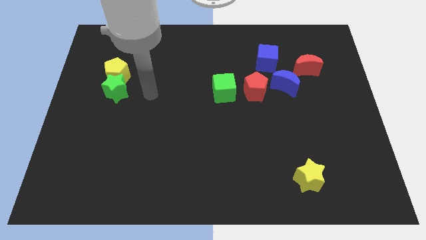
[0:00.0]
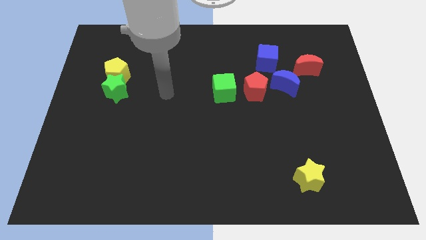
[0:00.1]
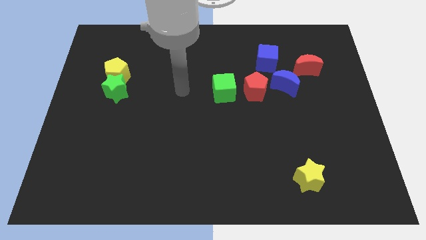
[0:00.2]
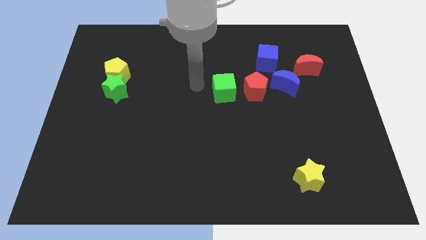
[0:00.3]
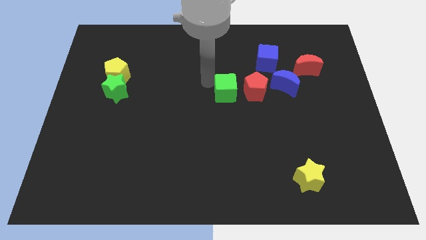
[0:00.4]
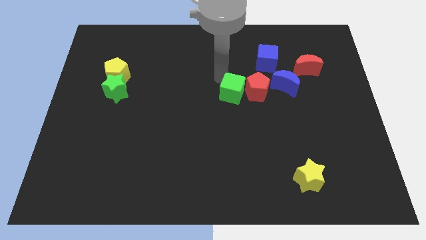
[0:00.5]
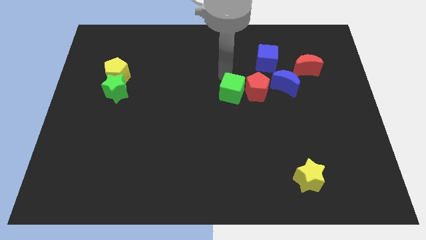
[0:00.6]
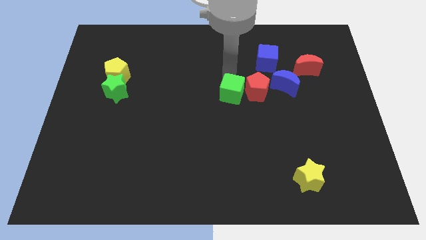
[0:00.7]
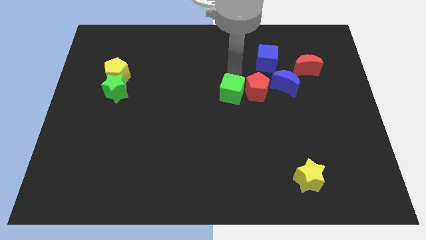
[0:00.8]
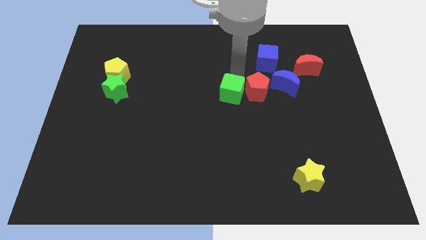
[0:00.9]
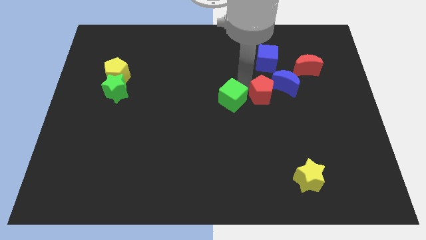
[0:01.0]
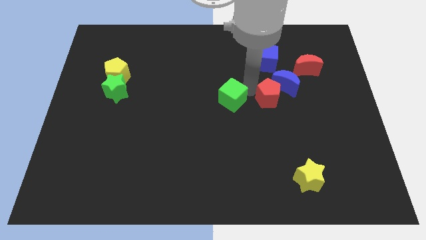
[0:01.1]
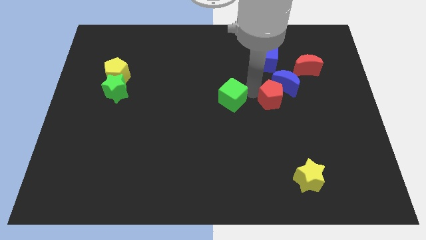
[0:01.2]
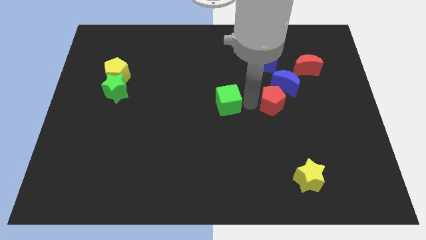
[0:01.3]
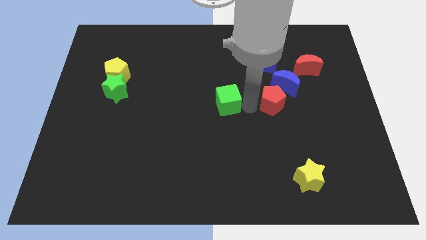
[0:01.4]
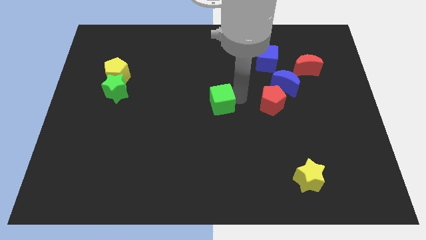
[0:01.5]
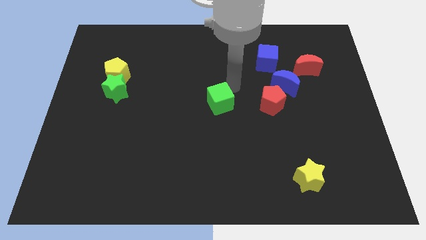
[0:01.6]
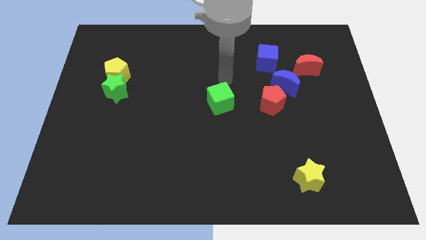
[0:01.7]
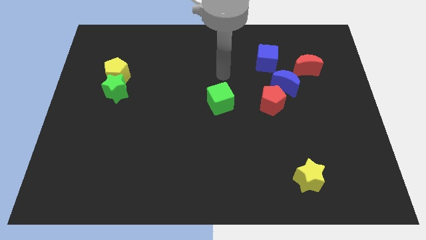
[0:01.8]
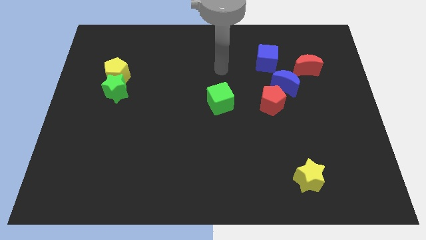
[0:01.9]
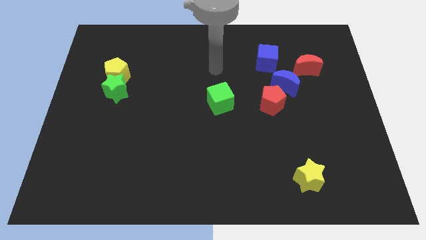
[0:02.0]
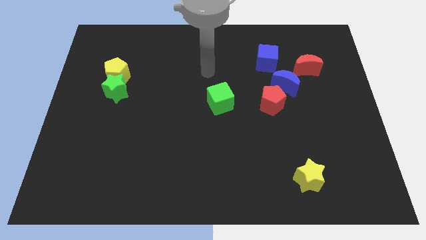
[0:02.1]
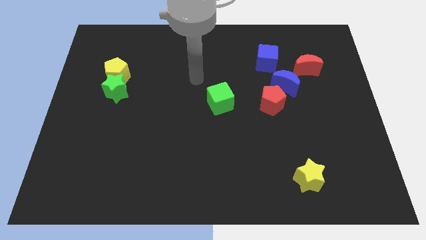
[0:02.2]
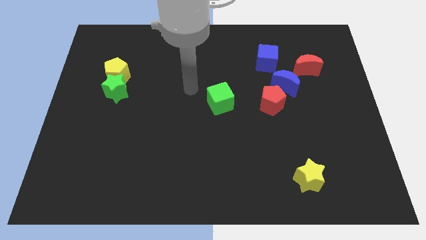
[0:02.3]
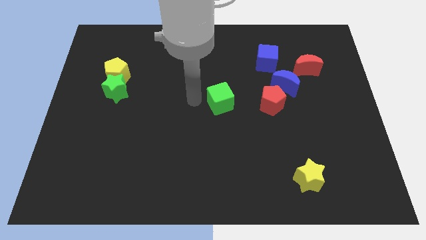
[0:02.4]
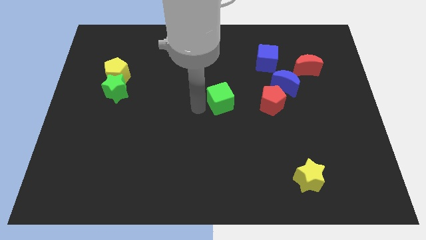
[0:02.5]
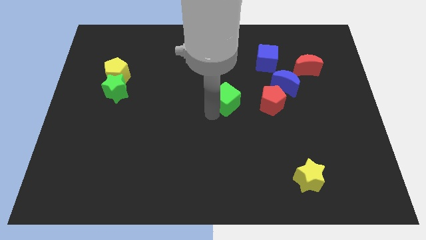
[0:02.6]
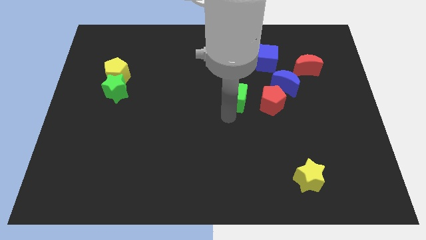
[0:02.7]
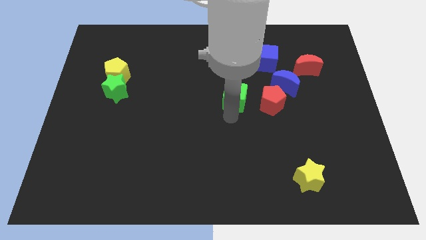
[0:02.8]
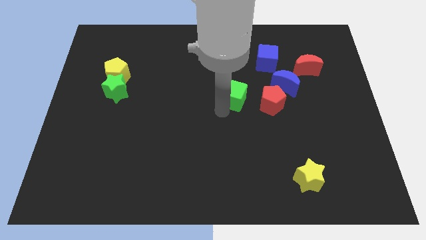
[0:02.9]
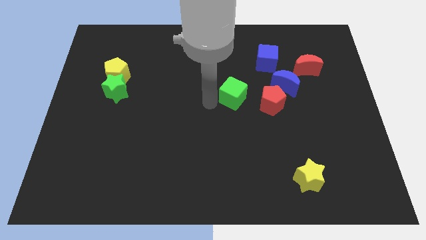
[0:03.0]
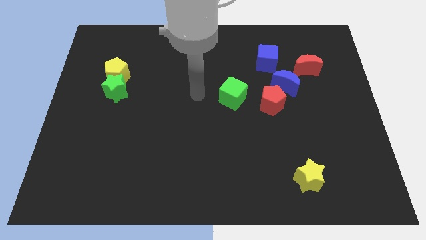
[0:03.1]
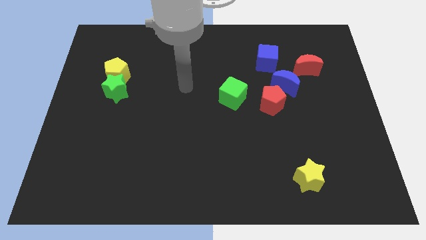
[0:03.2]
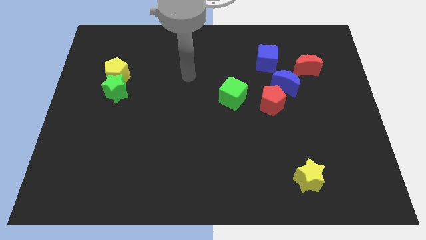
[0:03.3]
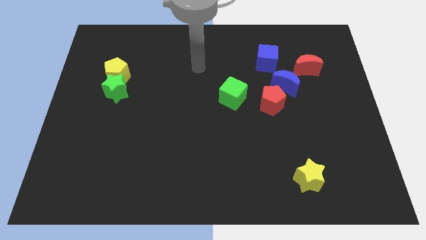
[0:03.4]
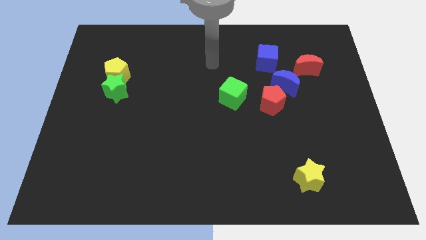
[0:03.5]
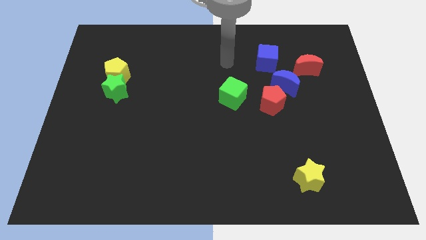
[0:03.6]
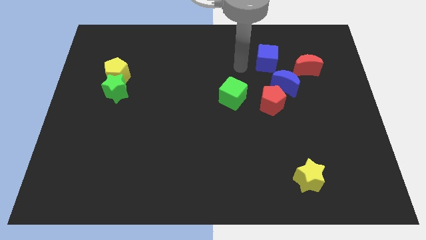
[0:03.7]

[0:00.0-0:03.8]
push the green cube and red pentagon towards the bottom side of the board

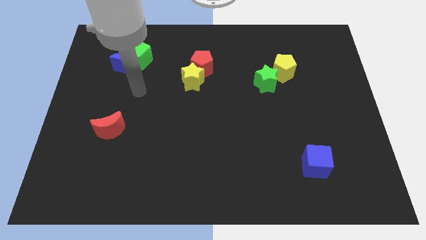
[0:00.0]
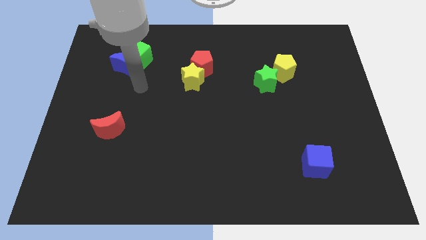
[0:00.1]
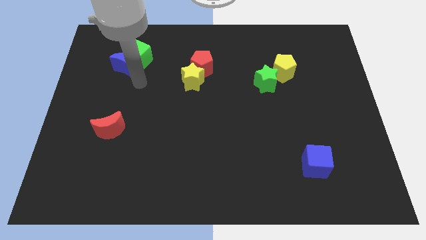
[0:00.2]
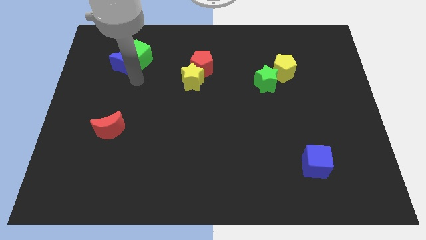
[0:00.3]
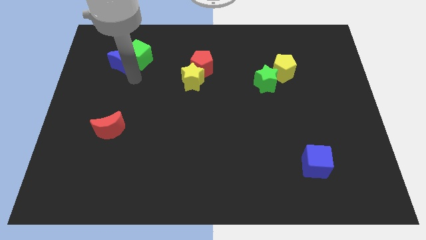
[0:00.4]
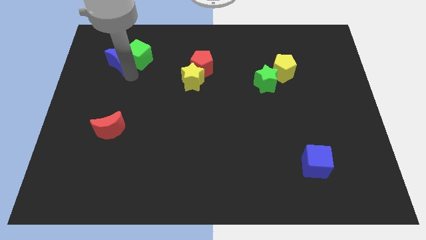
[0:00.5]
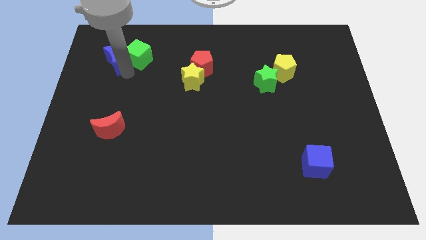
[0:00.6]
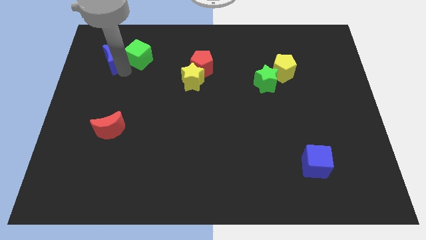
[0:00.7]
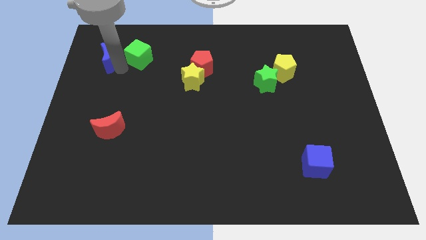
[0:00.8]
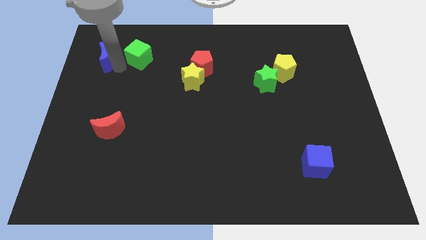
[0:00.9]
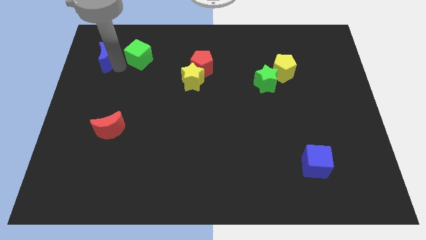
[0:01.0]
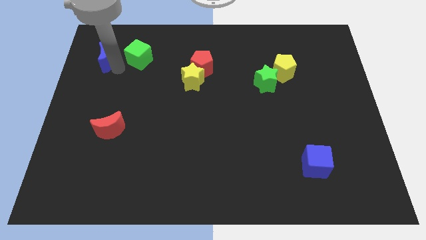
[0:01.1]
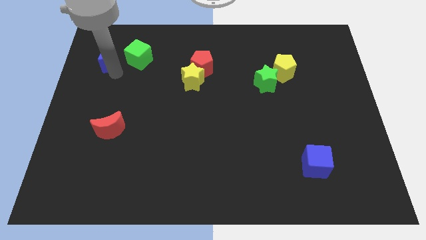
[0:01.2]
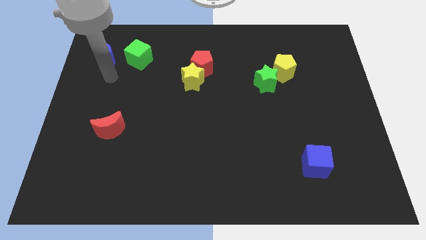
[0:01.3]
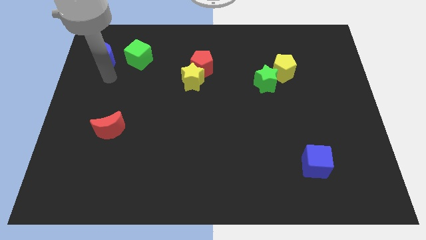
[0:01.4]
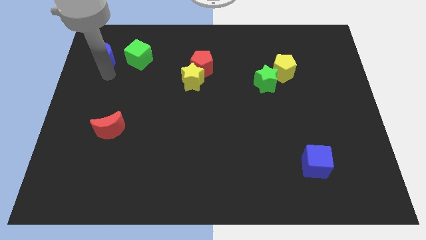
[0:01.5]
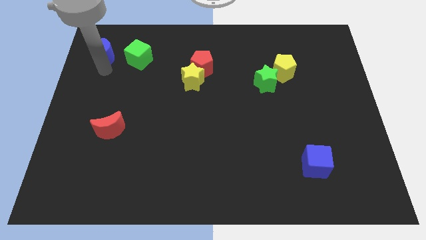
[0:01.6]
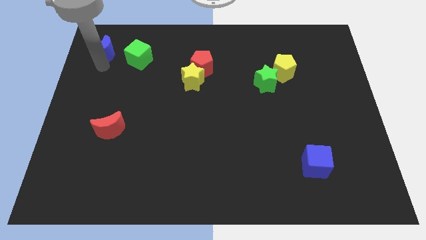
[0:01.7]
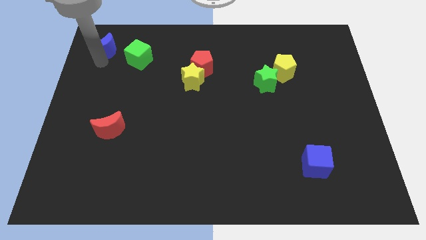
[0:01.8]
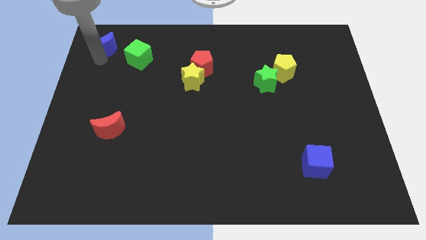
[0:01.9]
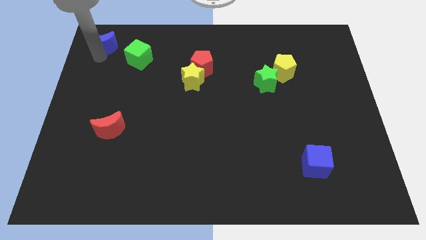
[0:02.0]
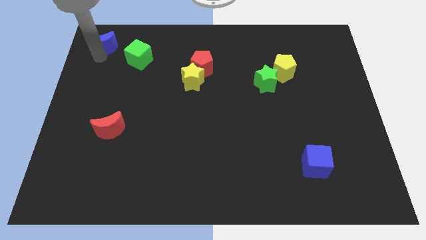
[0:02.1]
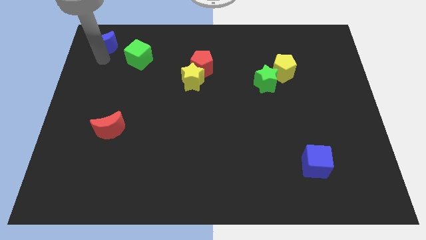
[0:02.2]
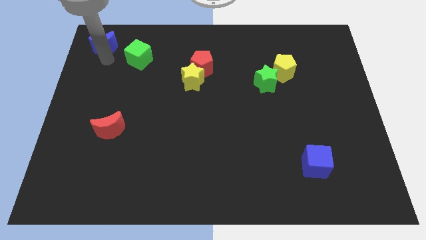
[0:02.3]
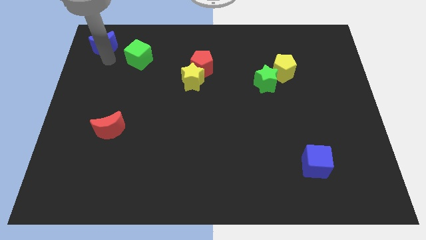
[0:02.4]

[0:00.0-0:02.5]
separate the blue moon and the green cube

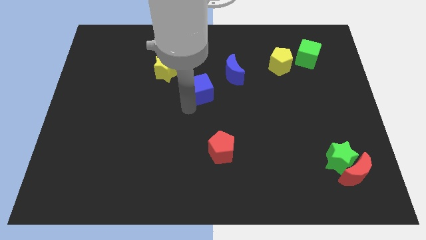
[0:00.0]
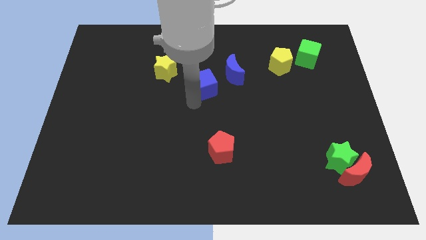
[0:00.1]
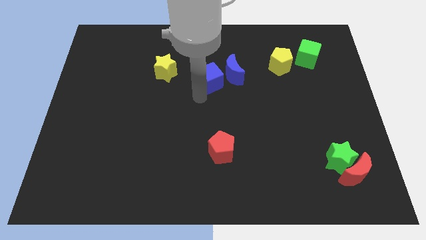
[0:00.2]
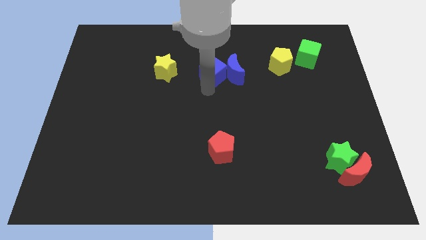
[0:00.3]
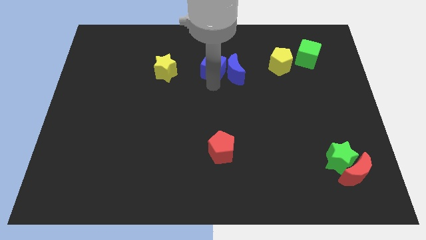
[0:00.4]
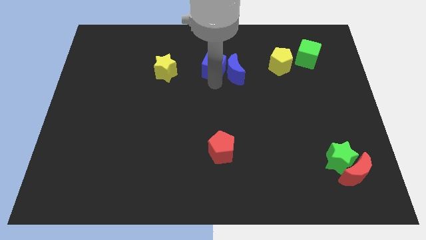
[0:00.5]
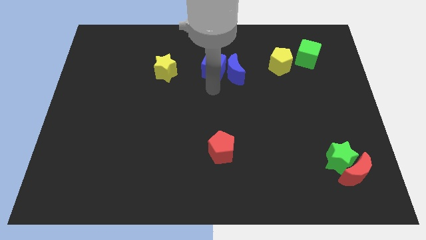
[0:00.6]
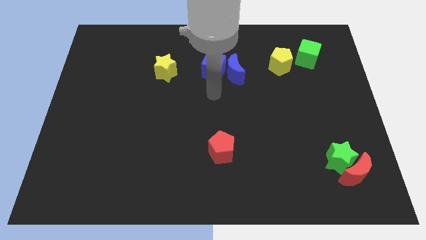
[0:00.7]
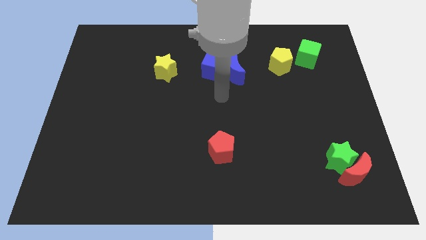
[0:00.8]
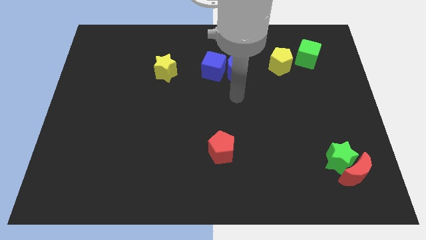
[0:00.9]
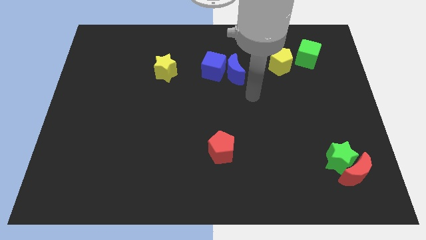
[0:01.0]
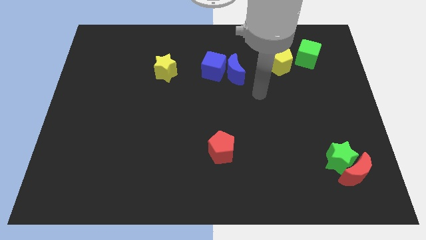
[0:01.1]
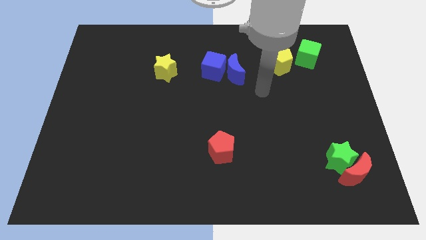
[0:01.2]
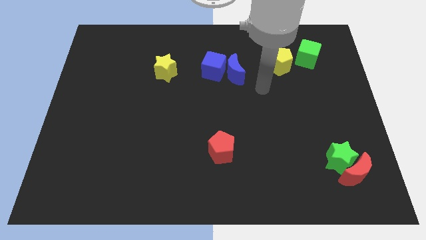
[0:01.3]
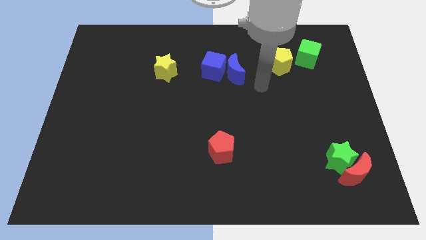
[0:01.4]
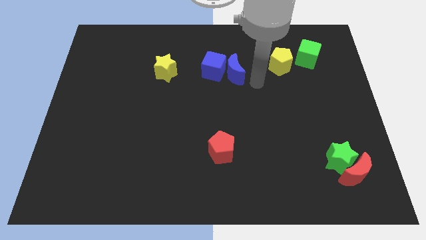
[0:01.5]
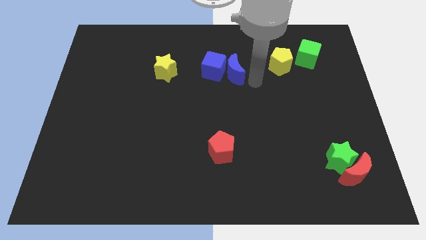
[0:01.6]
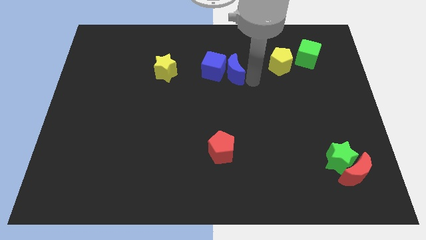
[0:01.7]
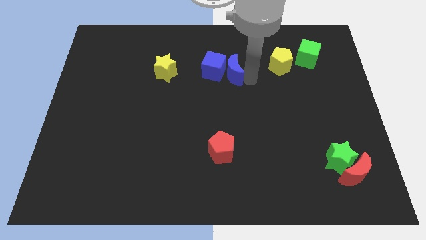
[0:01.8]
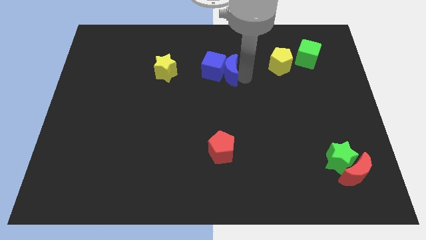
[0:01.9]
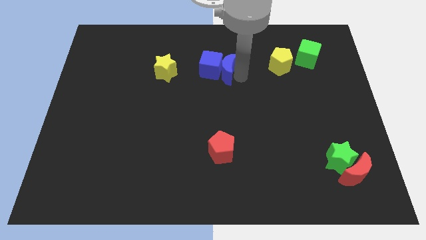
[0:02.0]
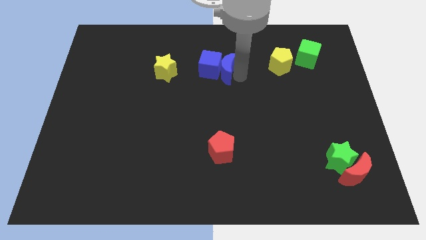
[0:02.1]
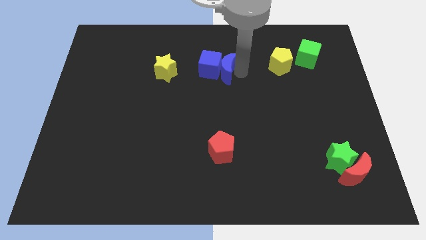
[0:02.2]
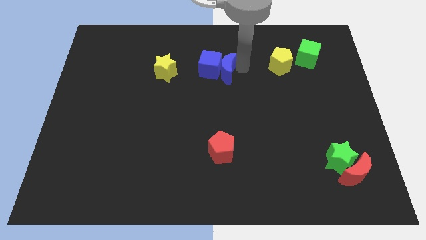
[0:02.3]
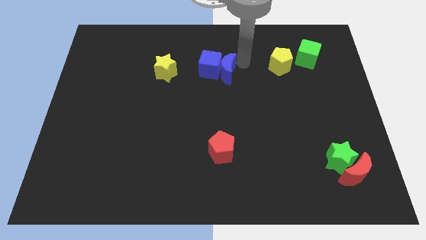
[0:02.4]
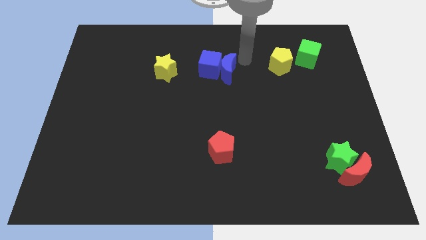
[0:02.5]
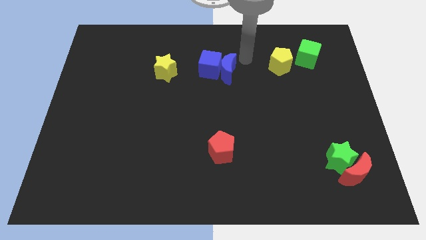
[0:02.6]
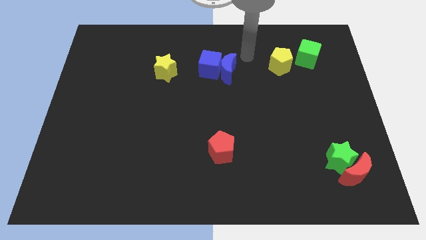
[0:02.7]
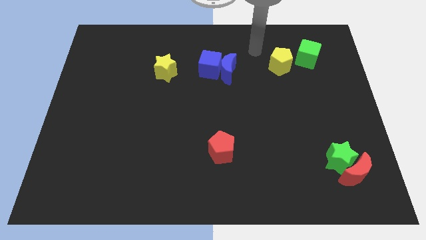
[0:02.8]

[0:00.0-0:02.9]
slightly move the blue blocks left to the board
